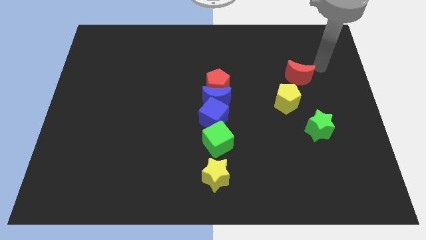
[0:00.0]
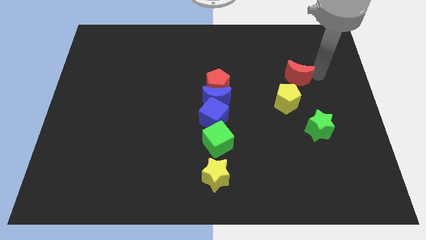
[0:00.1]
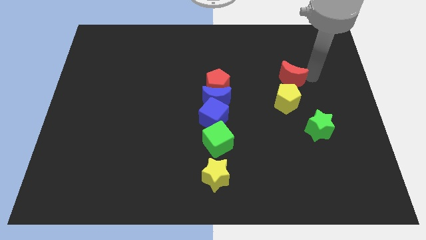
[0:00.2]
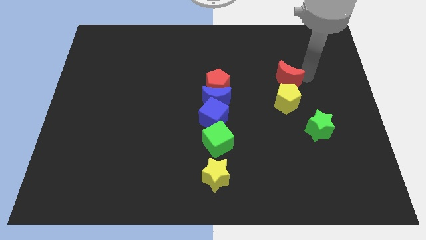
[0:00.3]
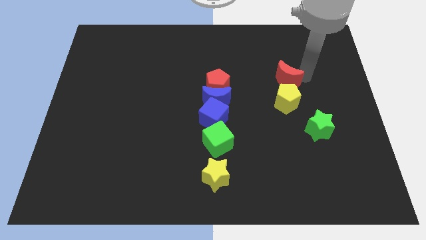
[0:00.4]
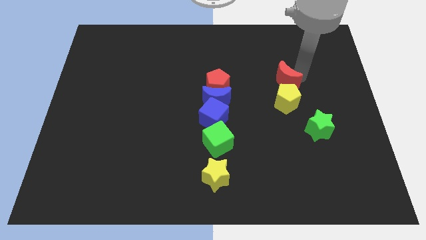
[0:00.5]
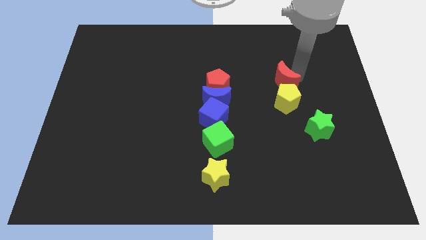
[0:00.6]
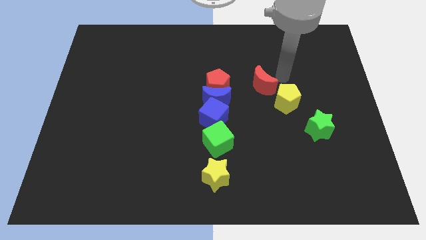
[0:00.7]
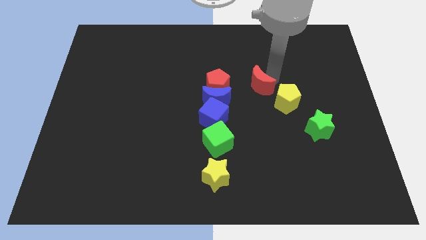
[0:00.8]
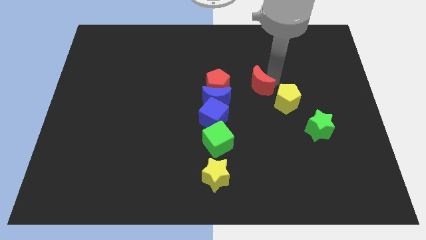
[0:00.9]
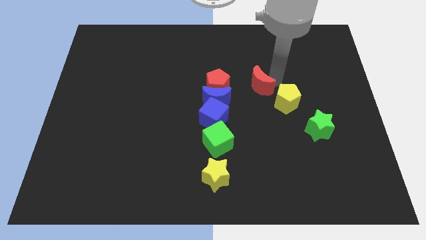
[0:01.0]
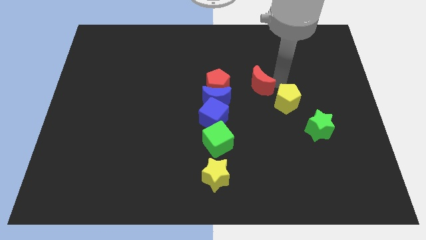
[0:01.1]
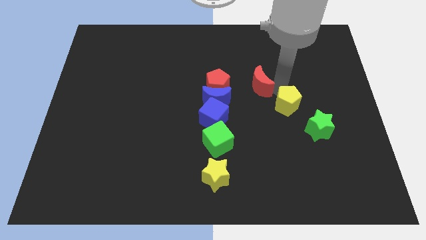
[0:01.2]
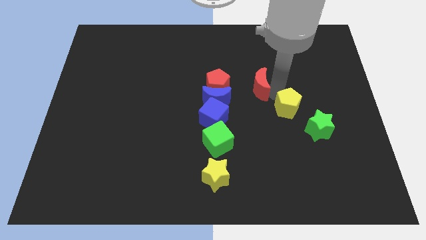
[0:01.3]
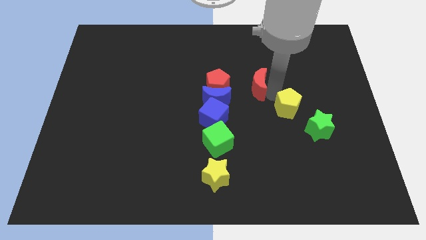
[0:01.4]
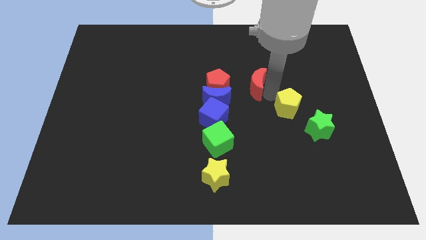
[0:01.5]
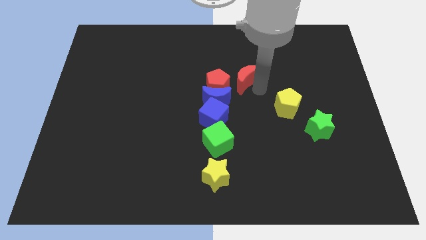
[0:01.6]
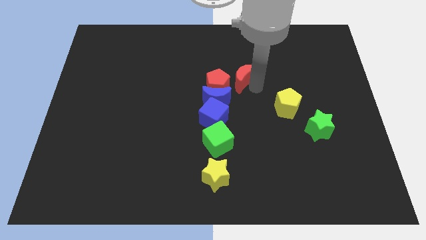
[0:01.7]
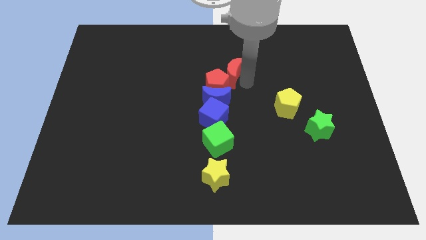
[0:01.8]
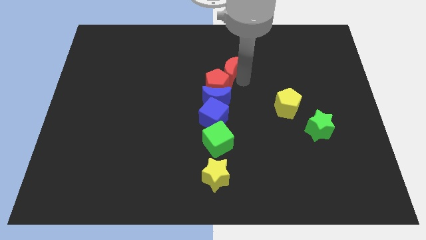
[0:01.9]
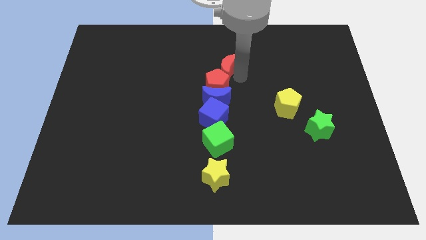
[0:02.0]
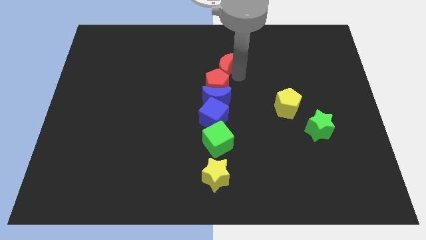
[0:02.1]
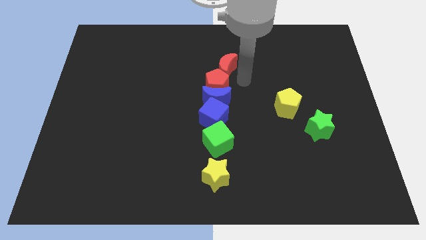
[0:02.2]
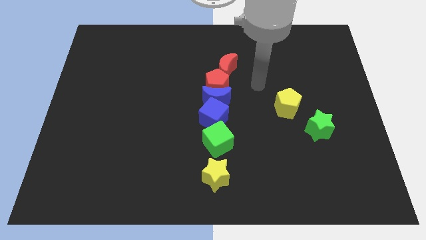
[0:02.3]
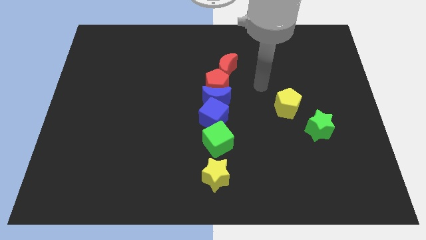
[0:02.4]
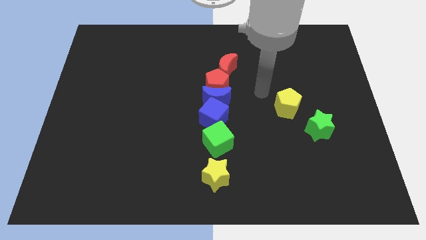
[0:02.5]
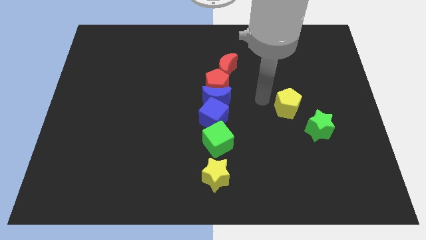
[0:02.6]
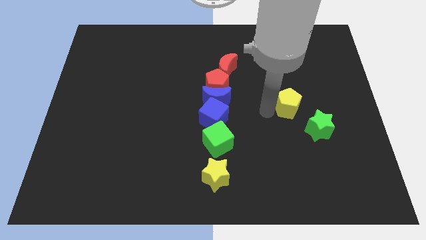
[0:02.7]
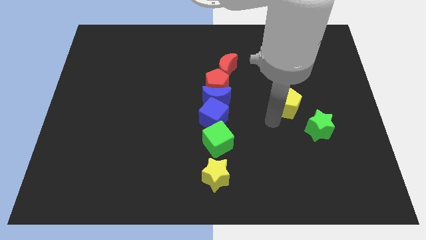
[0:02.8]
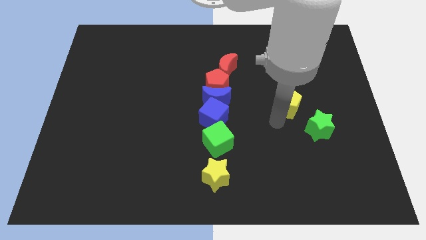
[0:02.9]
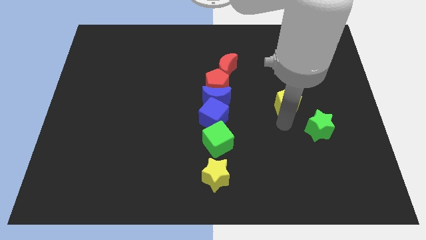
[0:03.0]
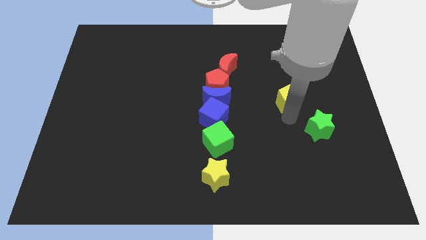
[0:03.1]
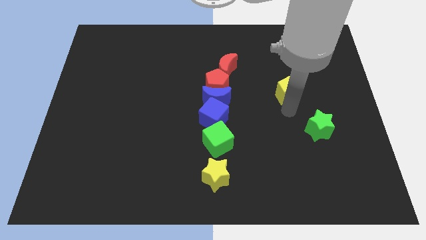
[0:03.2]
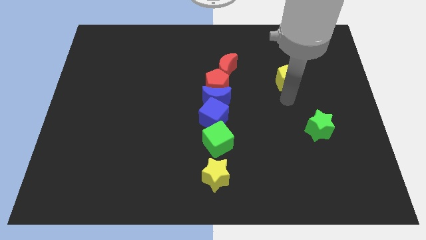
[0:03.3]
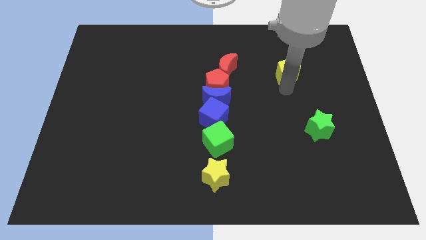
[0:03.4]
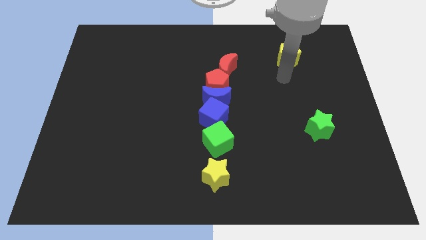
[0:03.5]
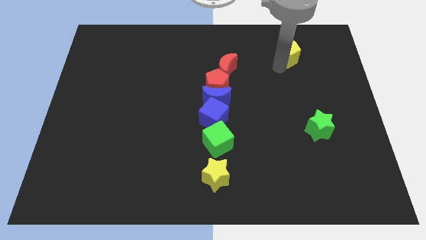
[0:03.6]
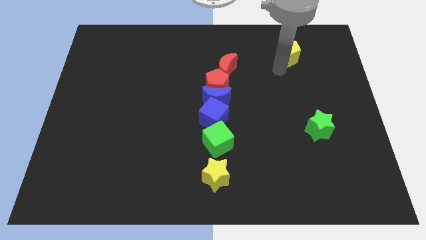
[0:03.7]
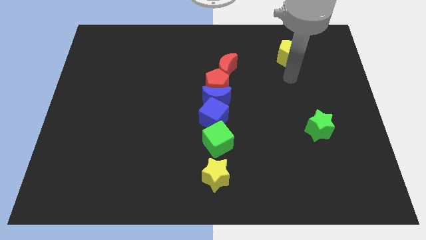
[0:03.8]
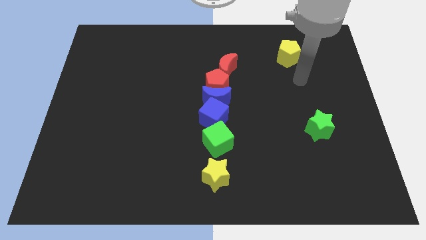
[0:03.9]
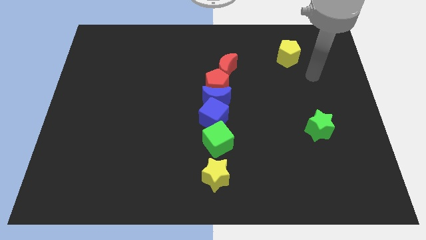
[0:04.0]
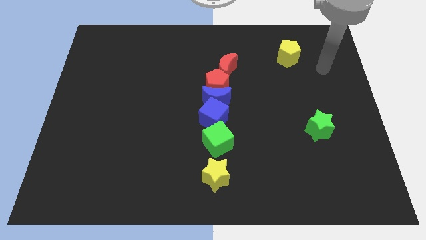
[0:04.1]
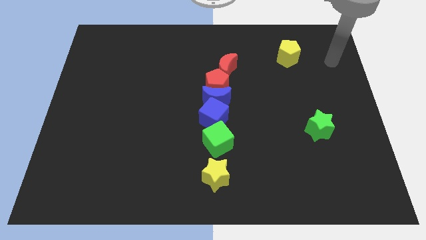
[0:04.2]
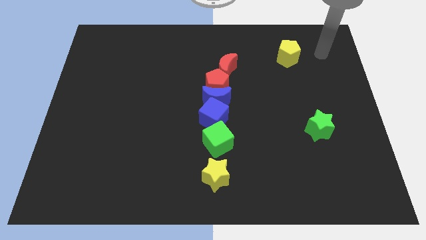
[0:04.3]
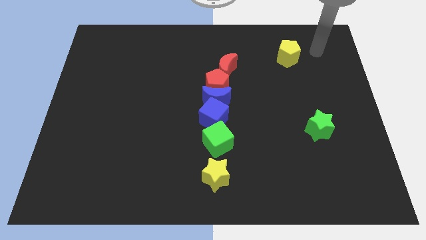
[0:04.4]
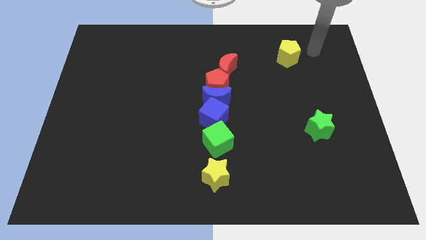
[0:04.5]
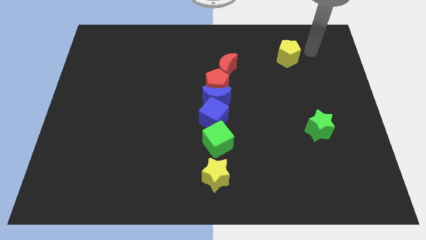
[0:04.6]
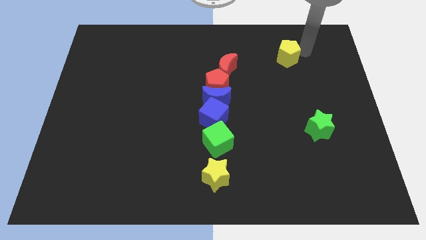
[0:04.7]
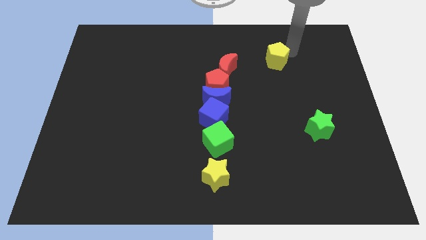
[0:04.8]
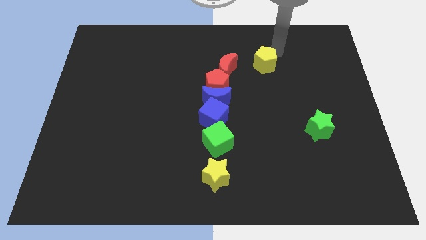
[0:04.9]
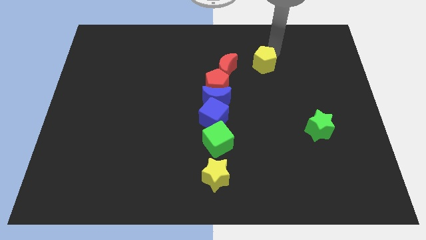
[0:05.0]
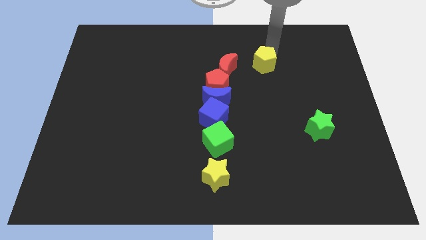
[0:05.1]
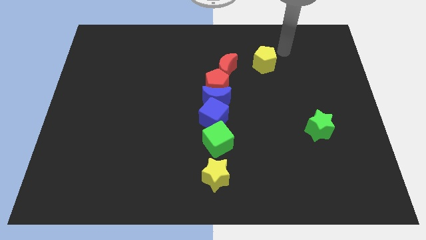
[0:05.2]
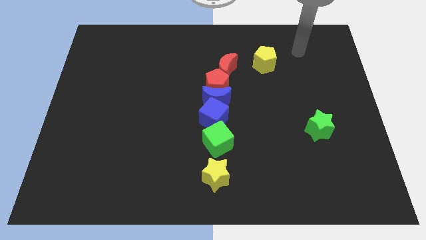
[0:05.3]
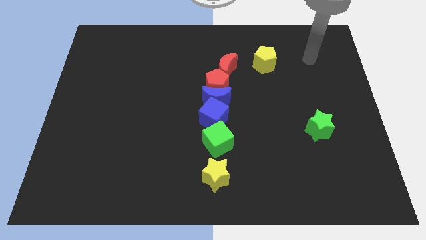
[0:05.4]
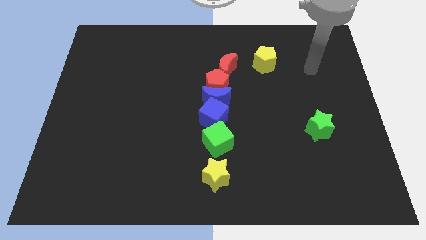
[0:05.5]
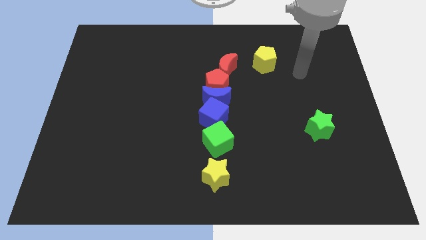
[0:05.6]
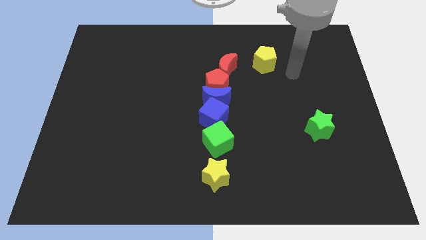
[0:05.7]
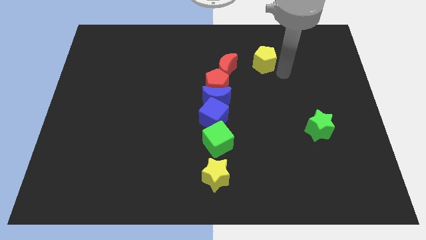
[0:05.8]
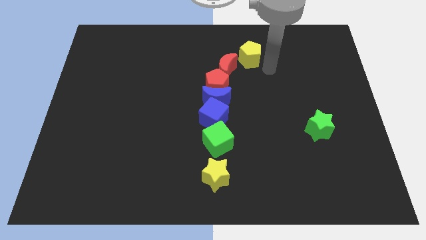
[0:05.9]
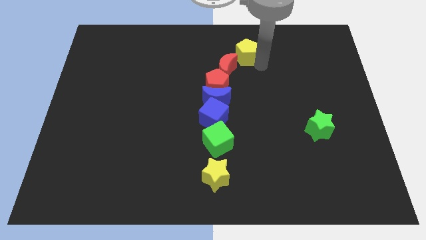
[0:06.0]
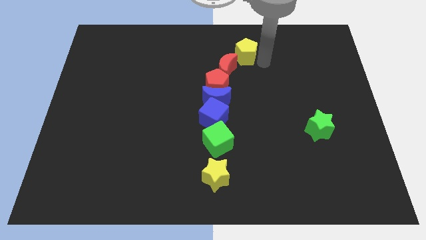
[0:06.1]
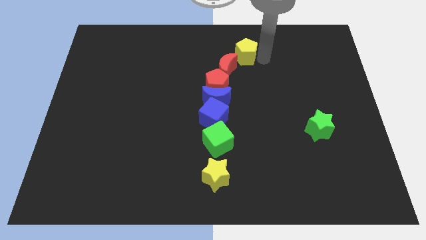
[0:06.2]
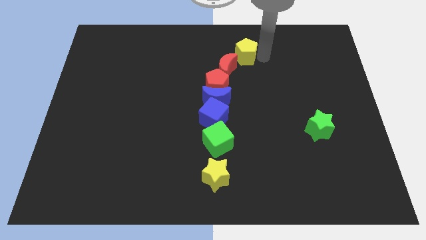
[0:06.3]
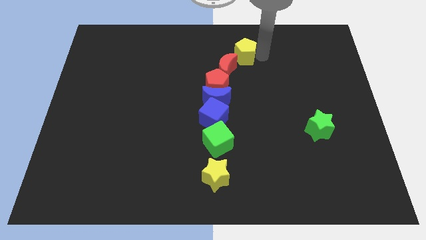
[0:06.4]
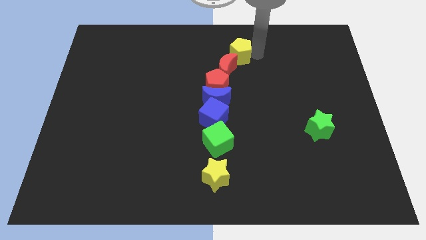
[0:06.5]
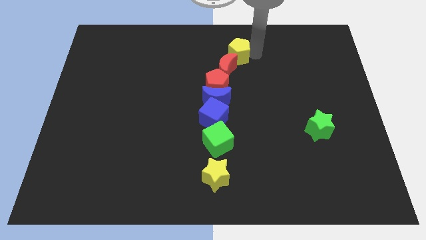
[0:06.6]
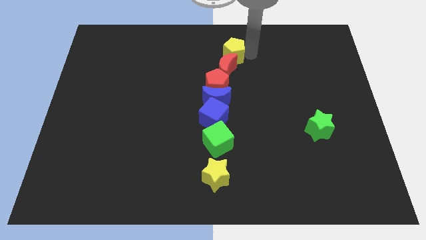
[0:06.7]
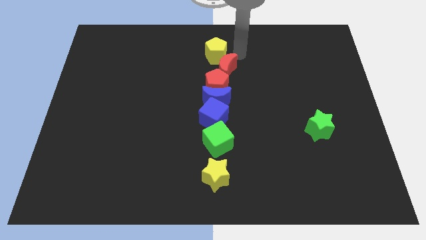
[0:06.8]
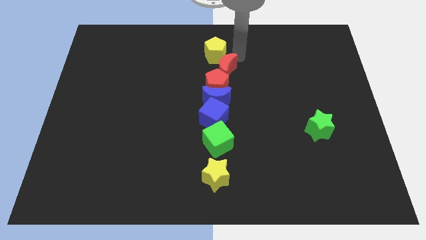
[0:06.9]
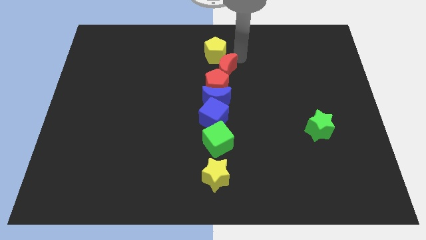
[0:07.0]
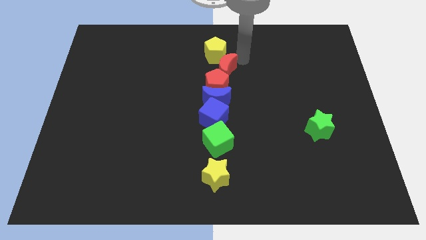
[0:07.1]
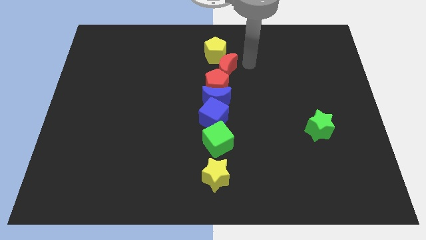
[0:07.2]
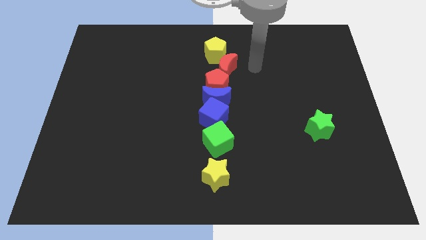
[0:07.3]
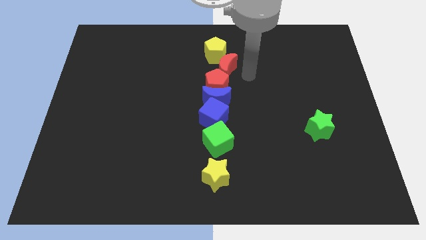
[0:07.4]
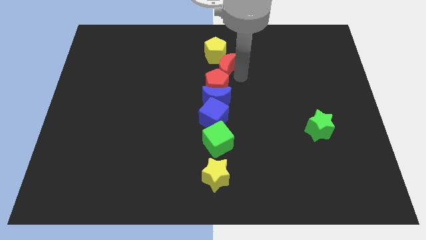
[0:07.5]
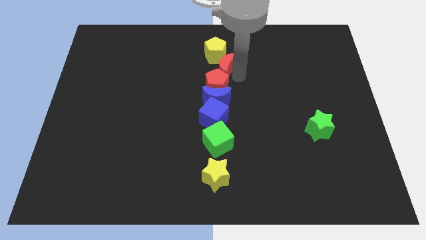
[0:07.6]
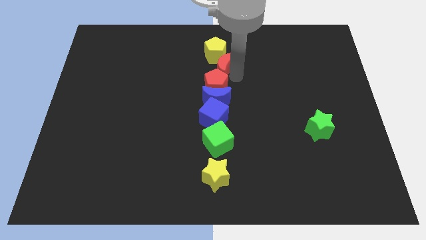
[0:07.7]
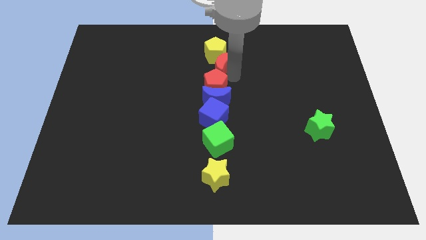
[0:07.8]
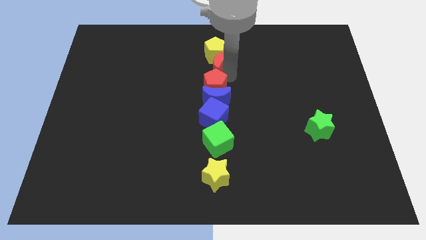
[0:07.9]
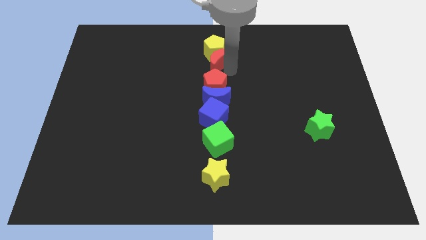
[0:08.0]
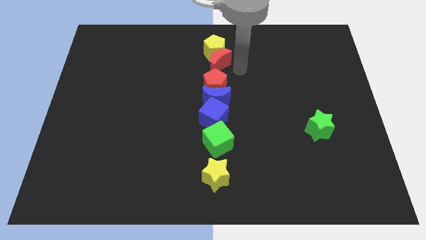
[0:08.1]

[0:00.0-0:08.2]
place the red crescent and yellow pentagon in line

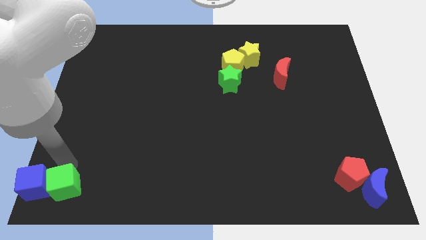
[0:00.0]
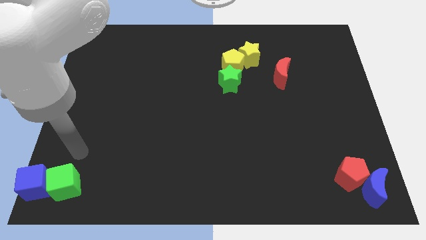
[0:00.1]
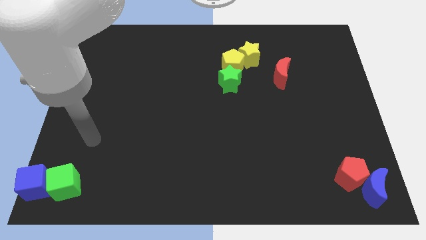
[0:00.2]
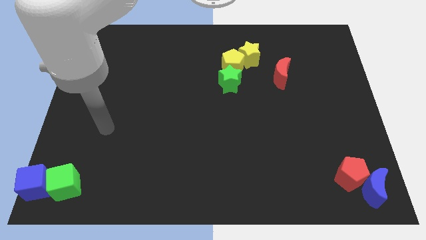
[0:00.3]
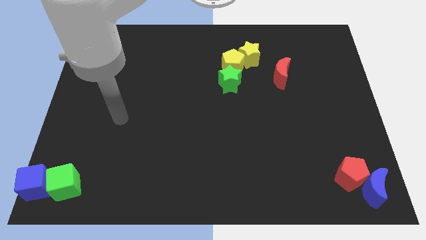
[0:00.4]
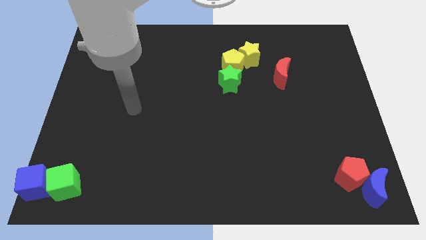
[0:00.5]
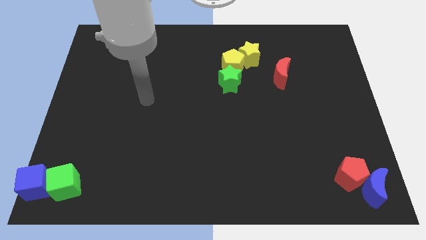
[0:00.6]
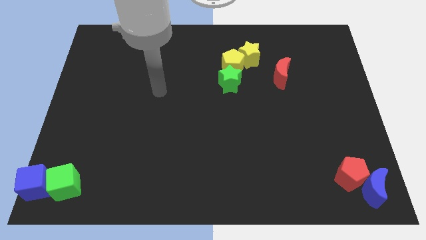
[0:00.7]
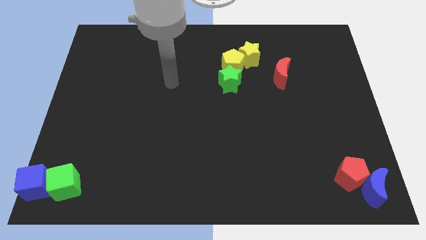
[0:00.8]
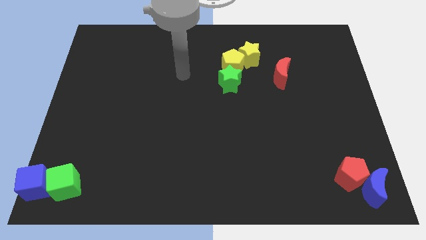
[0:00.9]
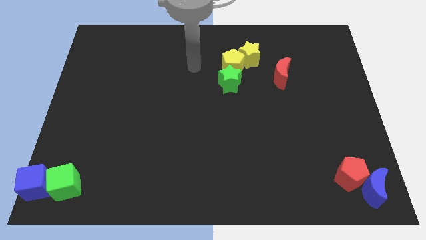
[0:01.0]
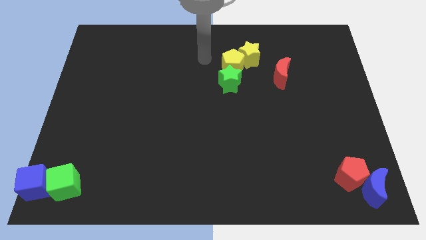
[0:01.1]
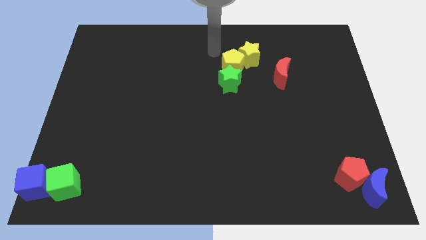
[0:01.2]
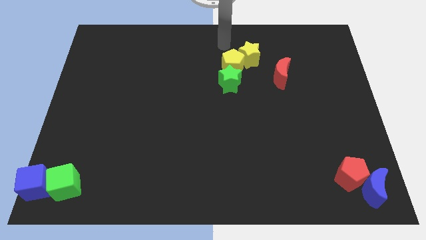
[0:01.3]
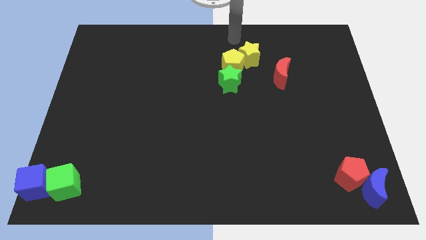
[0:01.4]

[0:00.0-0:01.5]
move the arm away from the green cube
